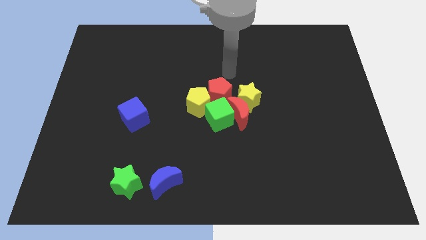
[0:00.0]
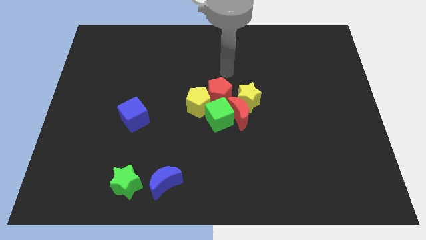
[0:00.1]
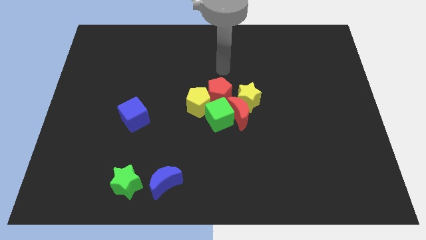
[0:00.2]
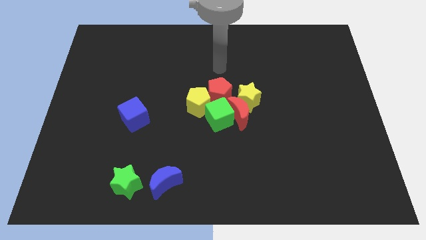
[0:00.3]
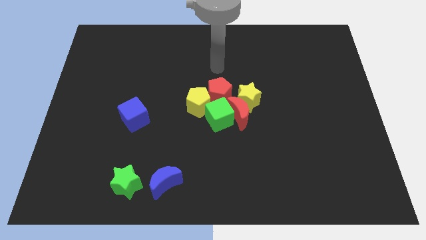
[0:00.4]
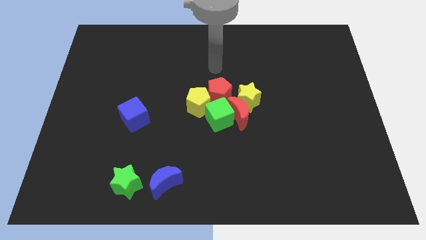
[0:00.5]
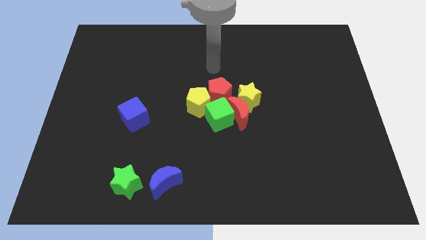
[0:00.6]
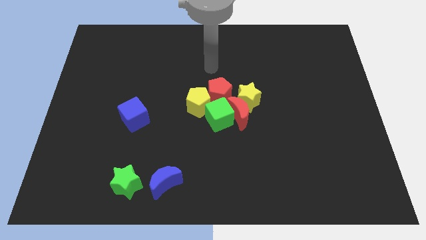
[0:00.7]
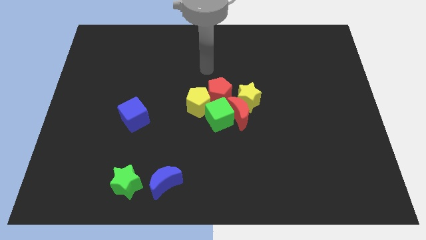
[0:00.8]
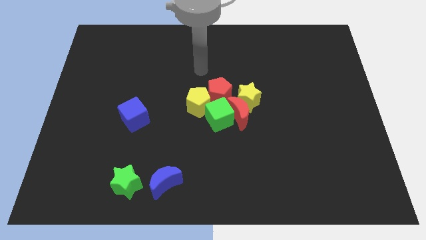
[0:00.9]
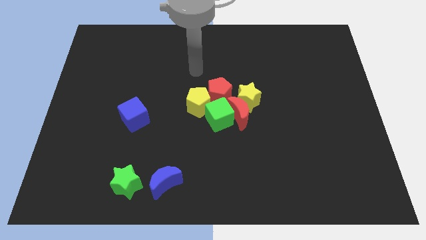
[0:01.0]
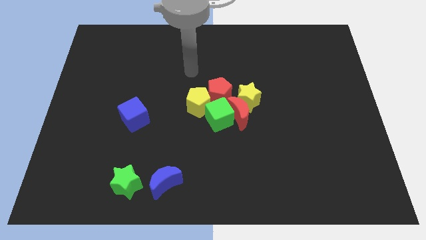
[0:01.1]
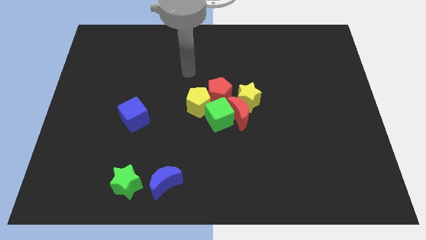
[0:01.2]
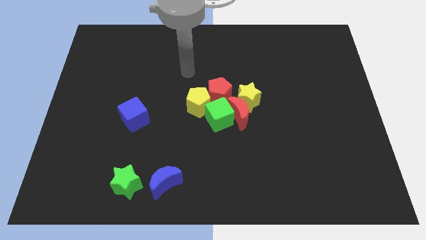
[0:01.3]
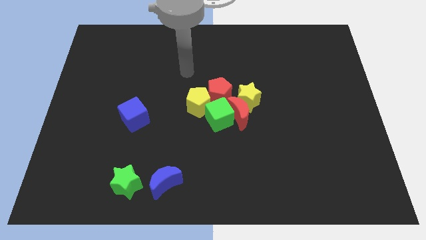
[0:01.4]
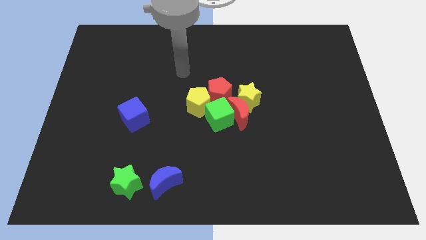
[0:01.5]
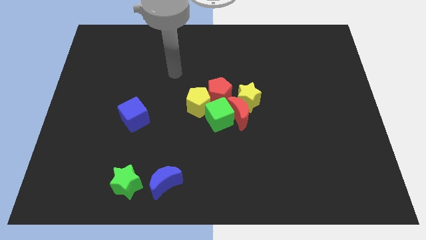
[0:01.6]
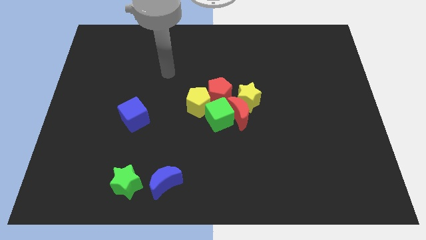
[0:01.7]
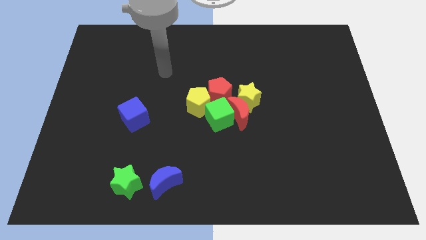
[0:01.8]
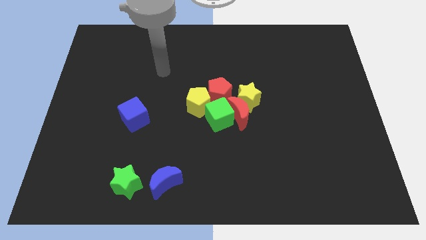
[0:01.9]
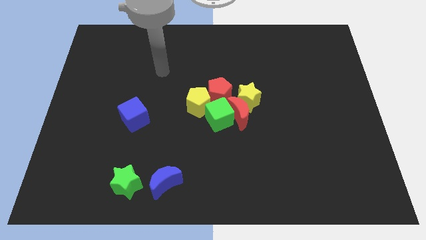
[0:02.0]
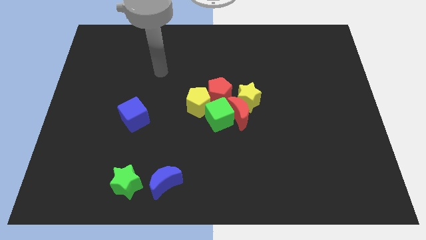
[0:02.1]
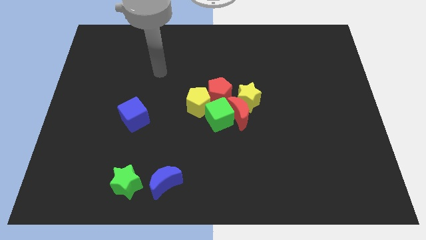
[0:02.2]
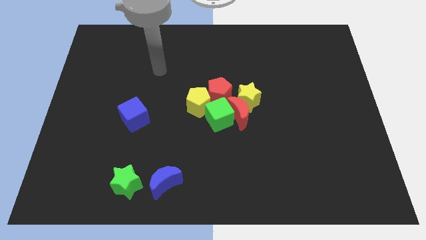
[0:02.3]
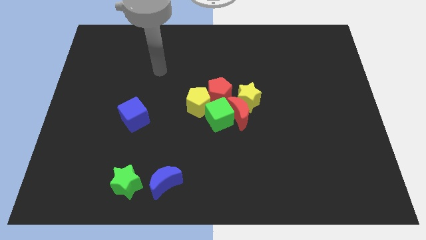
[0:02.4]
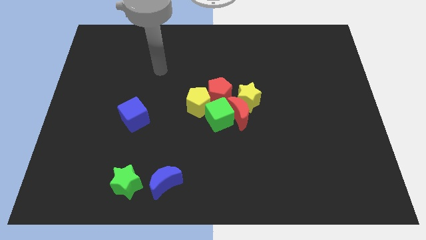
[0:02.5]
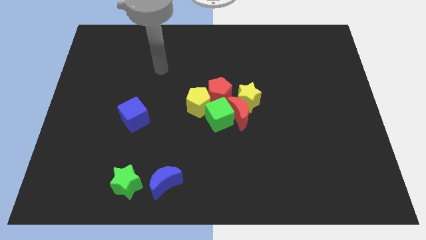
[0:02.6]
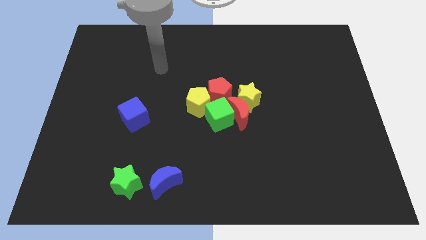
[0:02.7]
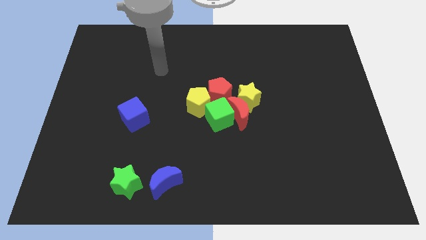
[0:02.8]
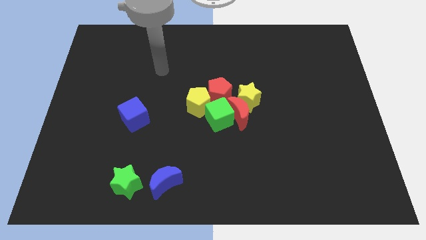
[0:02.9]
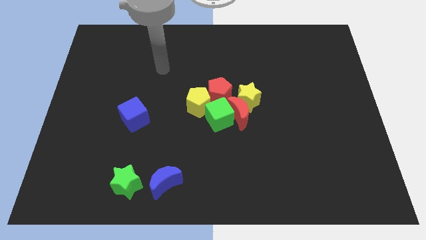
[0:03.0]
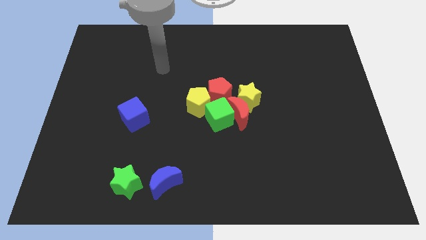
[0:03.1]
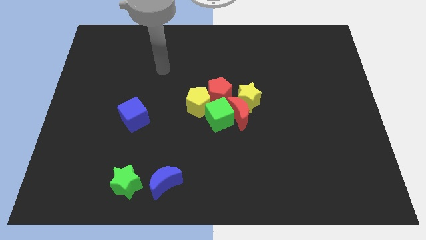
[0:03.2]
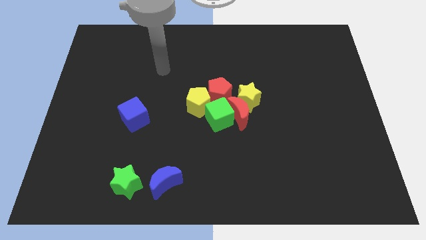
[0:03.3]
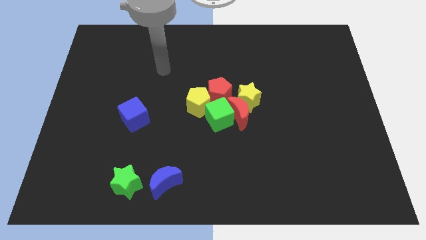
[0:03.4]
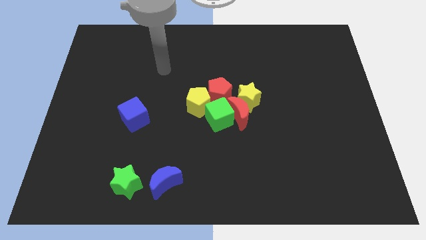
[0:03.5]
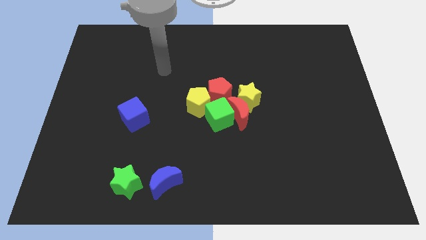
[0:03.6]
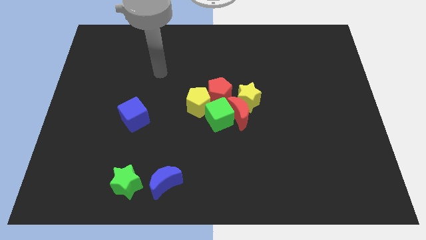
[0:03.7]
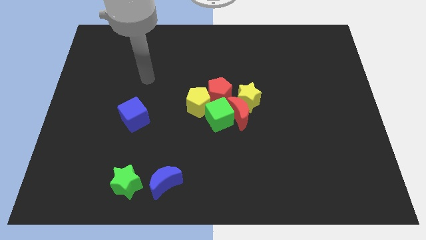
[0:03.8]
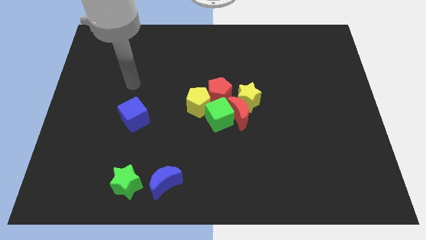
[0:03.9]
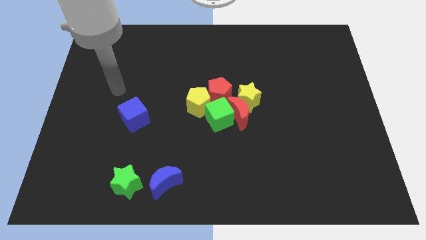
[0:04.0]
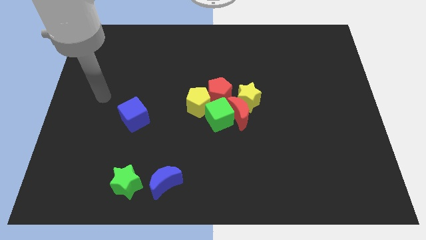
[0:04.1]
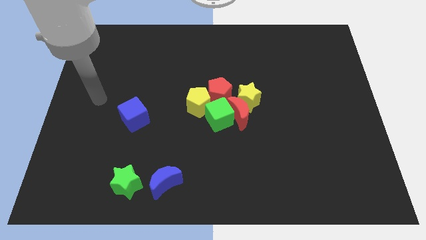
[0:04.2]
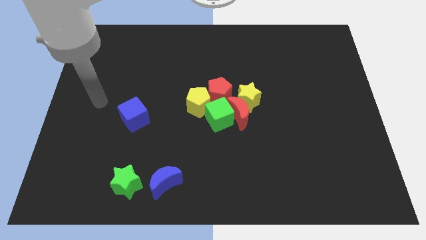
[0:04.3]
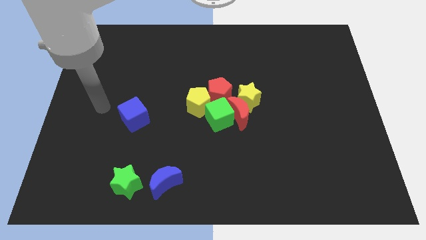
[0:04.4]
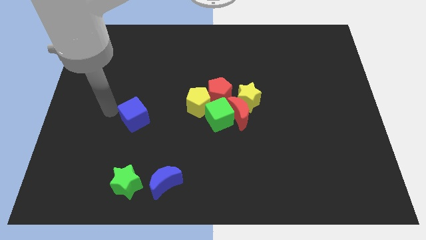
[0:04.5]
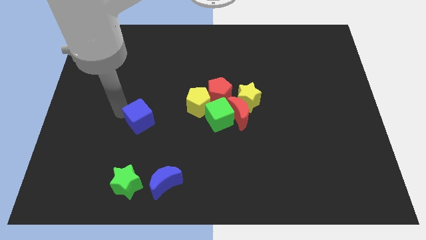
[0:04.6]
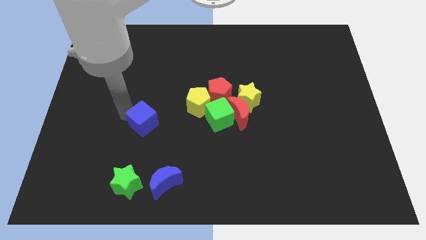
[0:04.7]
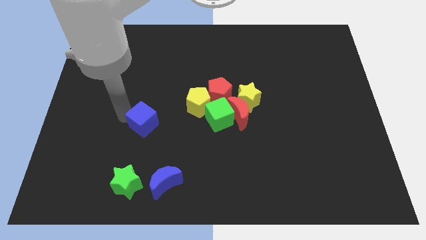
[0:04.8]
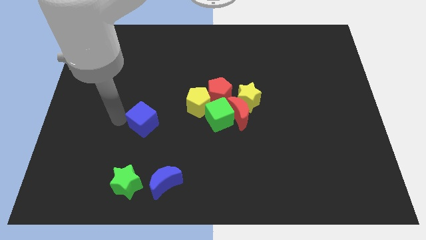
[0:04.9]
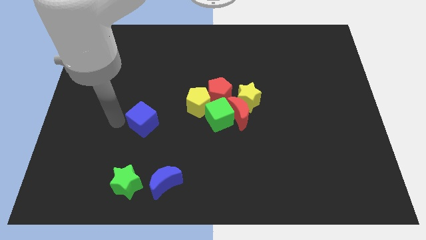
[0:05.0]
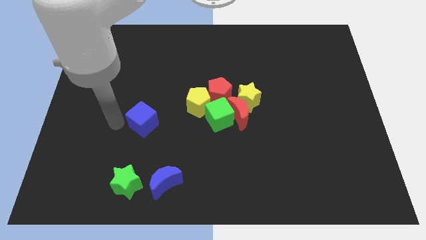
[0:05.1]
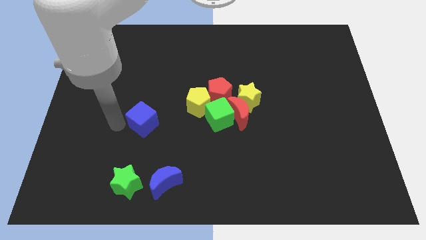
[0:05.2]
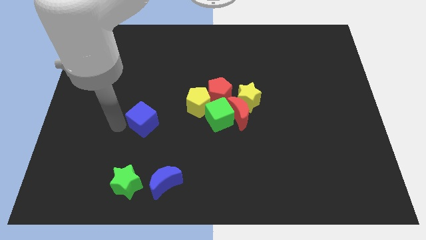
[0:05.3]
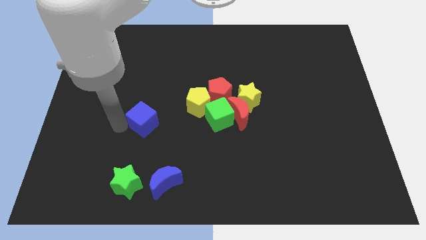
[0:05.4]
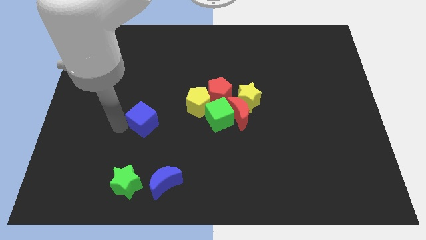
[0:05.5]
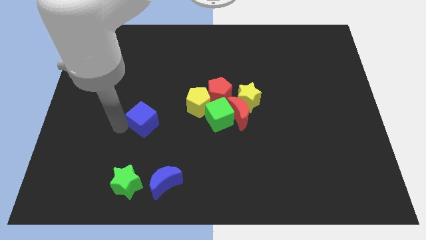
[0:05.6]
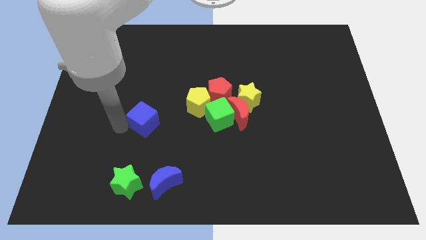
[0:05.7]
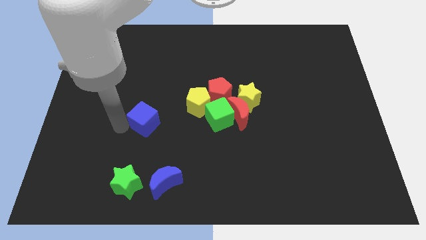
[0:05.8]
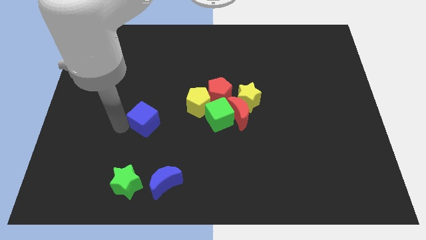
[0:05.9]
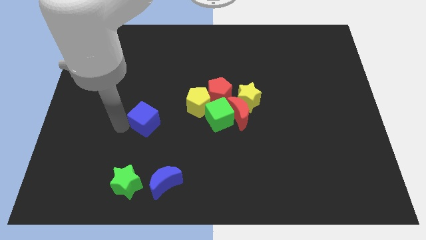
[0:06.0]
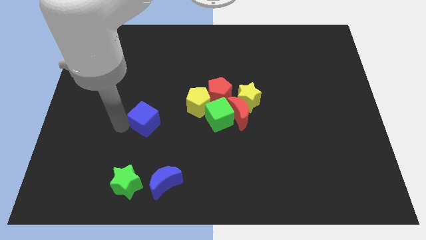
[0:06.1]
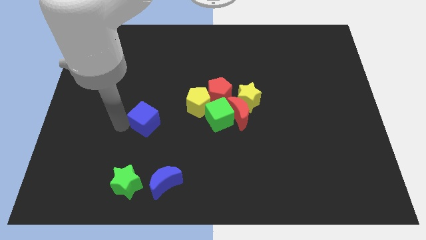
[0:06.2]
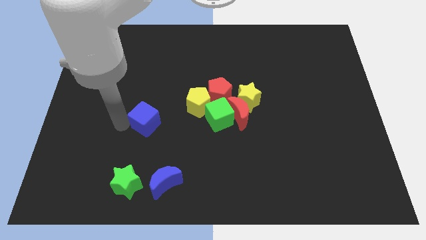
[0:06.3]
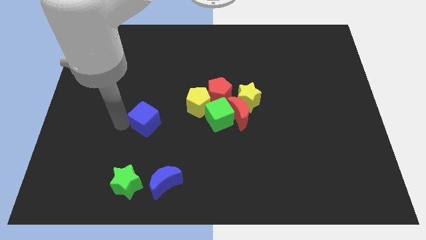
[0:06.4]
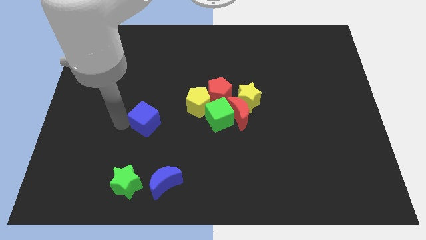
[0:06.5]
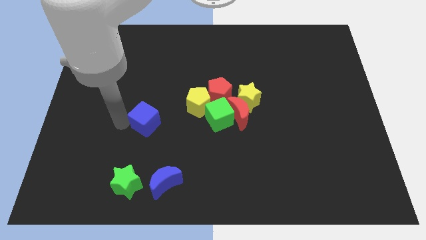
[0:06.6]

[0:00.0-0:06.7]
place your arm to left side of the blue cube

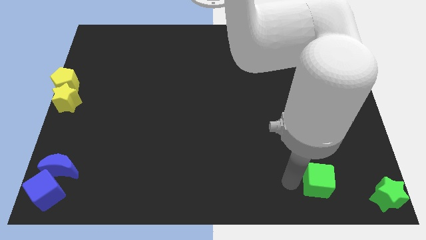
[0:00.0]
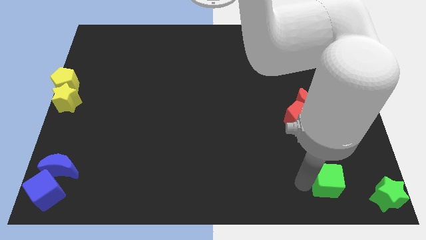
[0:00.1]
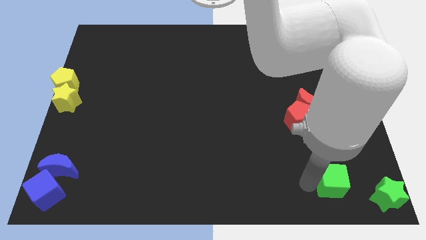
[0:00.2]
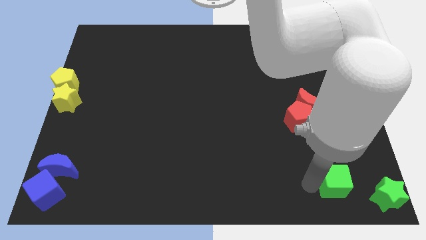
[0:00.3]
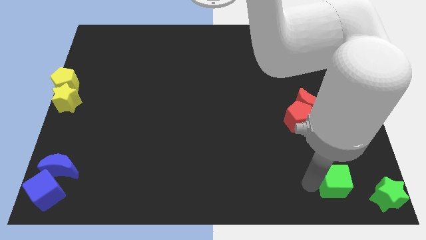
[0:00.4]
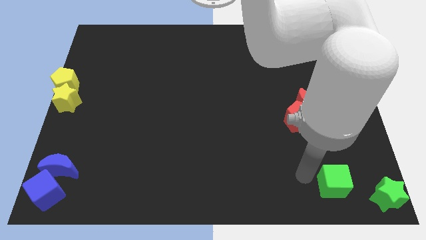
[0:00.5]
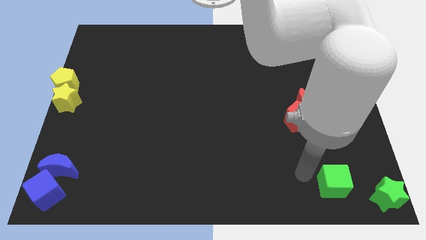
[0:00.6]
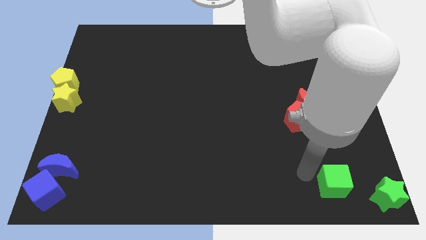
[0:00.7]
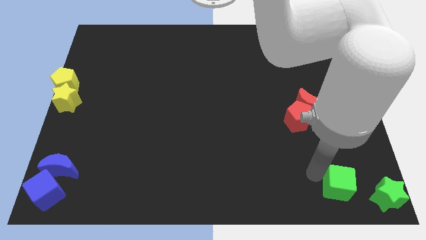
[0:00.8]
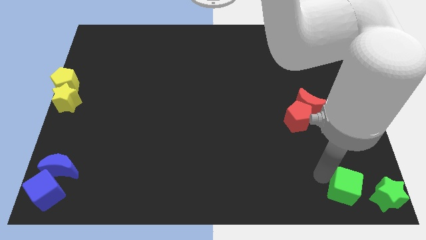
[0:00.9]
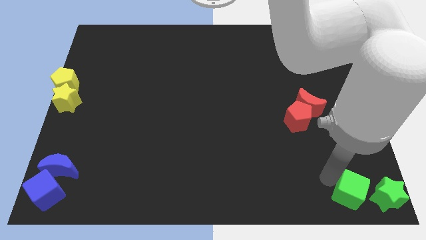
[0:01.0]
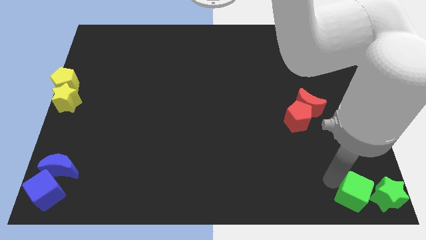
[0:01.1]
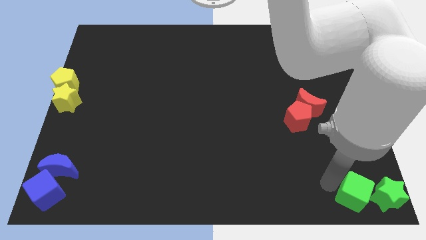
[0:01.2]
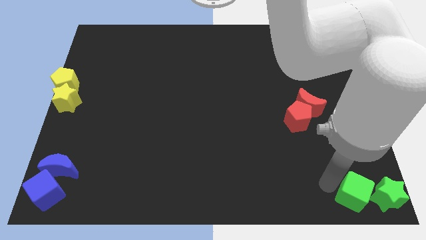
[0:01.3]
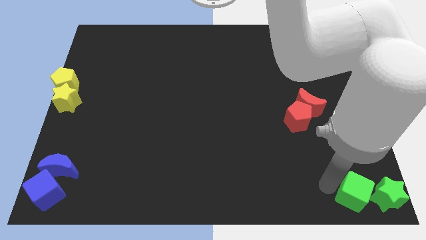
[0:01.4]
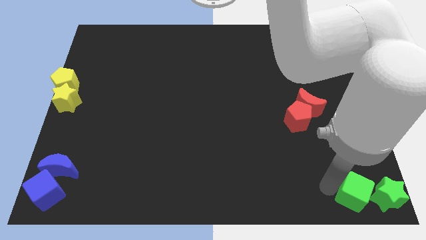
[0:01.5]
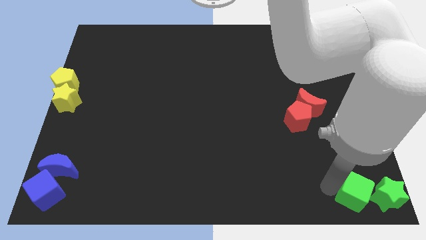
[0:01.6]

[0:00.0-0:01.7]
place the green cube to the left side of the green star

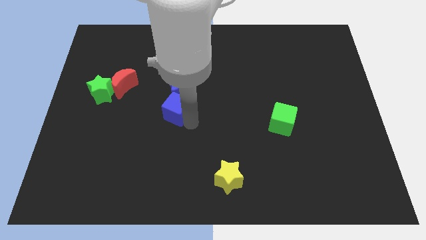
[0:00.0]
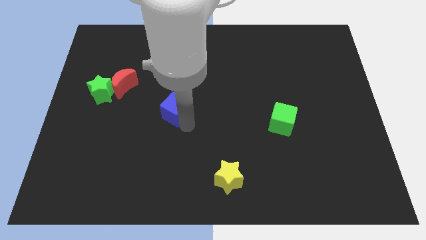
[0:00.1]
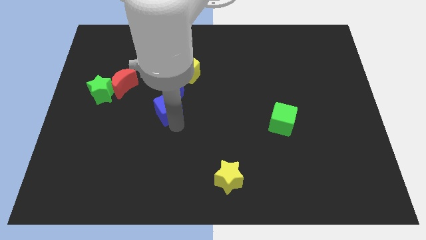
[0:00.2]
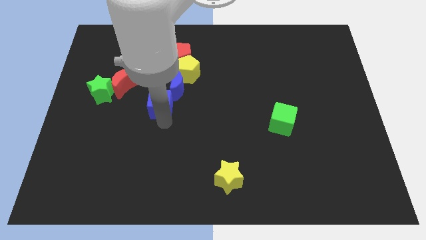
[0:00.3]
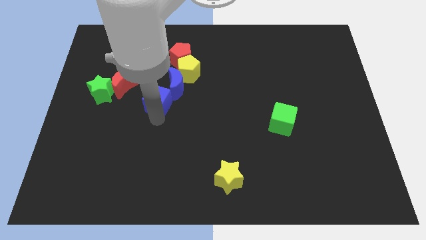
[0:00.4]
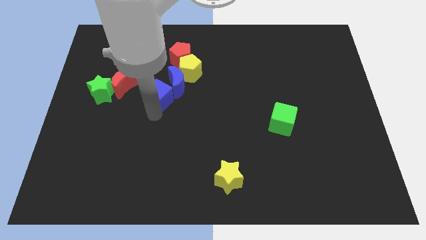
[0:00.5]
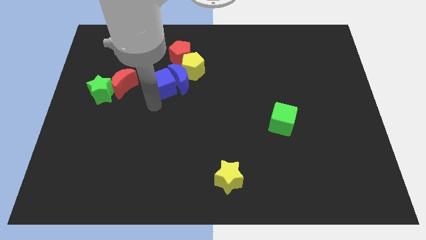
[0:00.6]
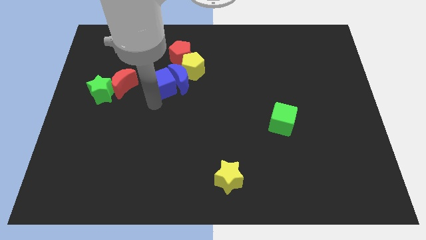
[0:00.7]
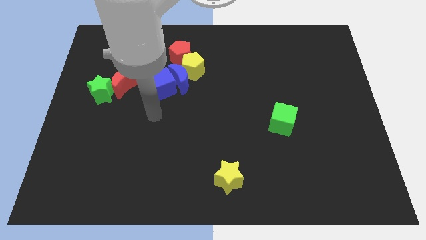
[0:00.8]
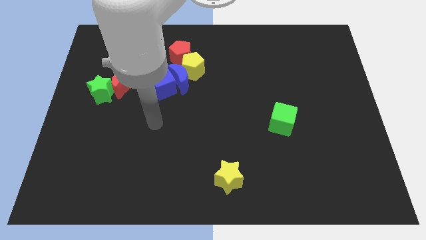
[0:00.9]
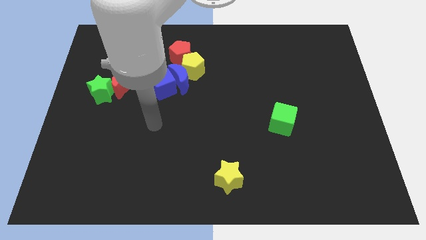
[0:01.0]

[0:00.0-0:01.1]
move the blue cube to the left of the blue crescent
